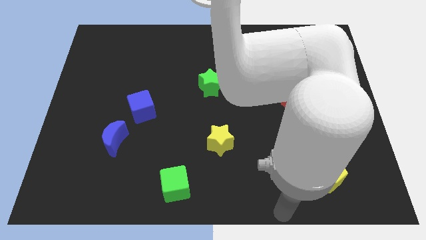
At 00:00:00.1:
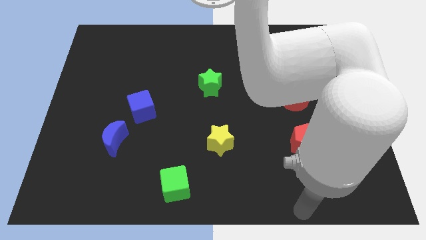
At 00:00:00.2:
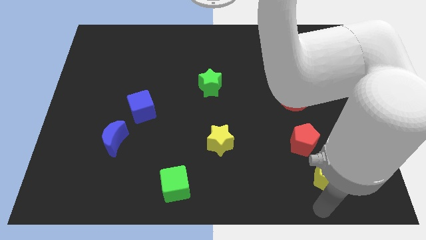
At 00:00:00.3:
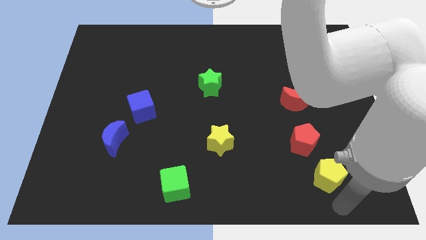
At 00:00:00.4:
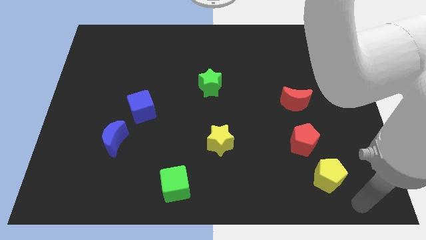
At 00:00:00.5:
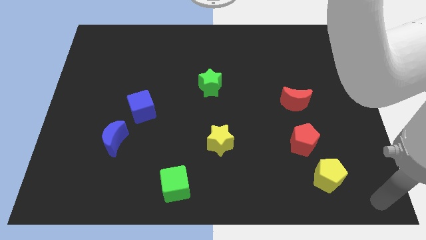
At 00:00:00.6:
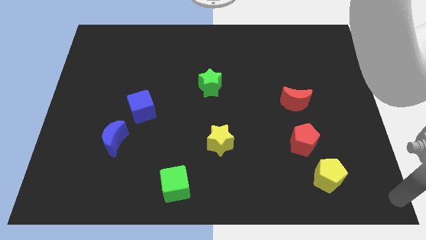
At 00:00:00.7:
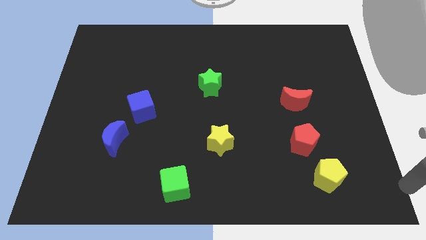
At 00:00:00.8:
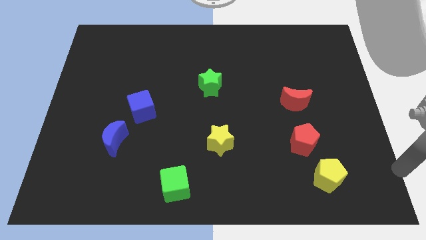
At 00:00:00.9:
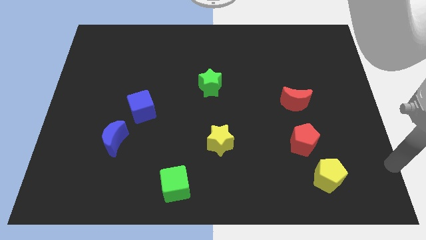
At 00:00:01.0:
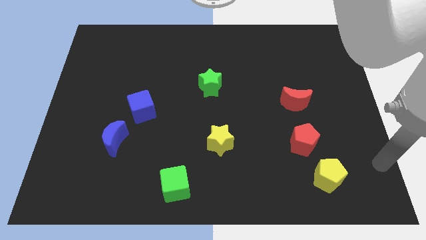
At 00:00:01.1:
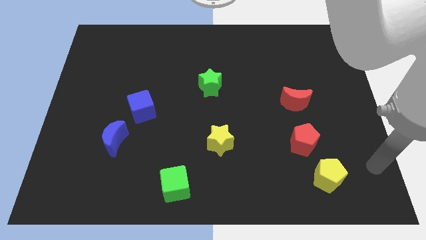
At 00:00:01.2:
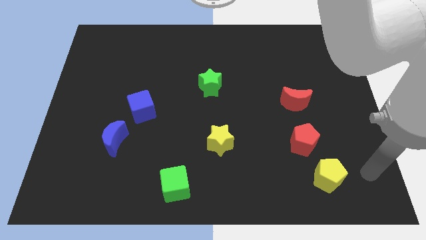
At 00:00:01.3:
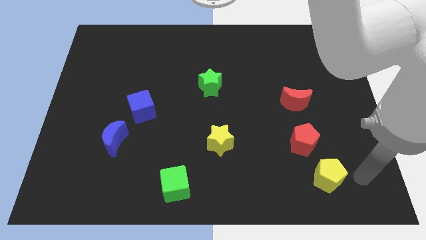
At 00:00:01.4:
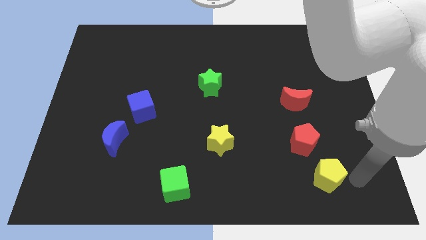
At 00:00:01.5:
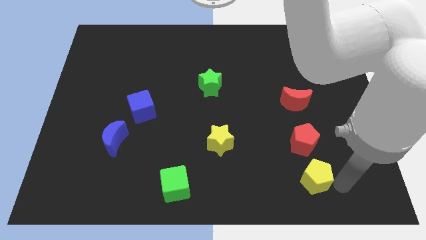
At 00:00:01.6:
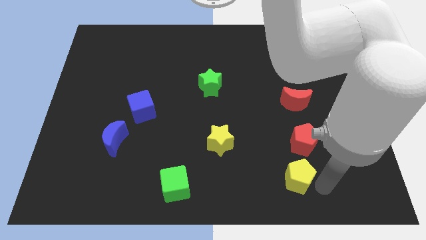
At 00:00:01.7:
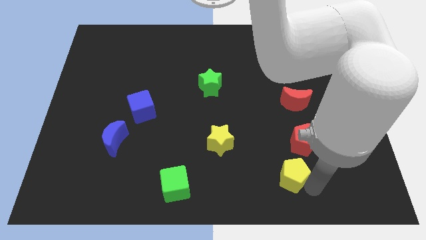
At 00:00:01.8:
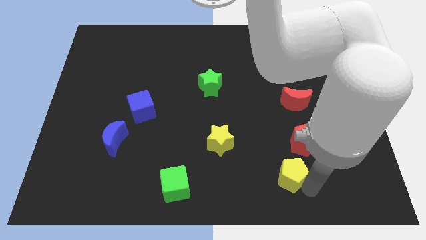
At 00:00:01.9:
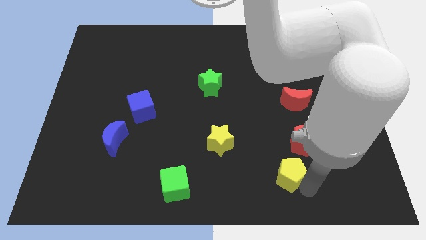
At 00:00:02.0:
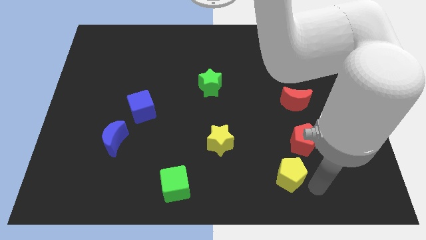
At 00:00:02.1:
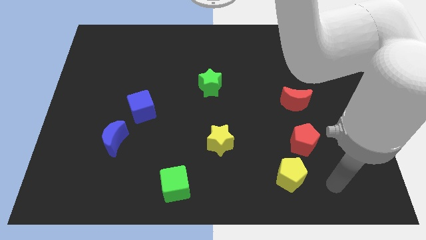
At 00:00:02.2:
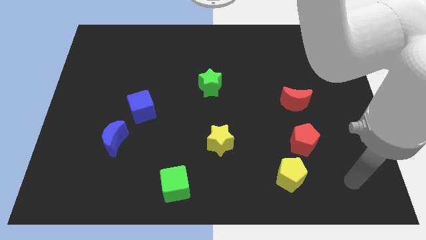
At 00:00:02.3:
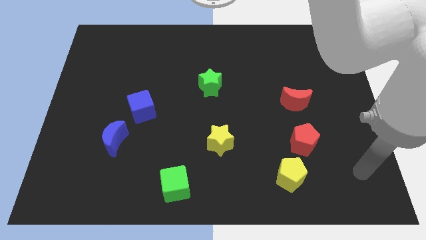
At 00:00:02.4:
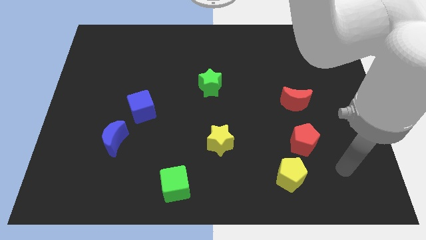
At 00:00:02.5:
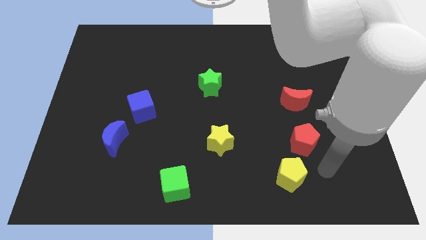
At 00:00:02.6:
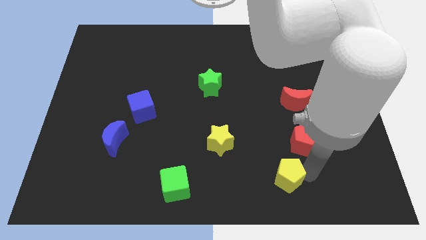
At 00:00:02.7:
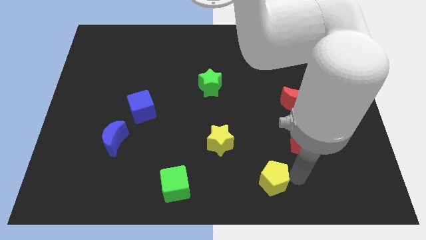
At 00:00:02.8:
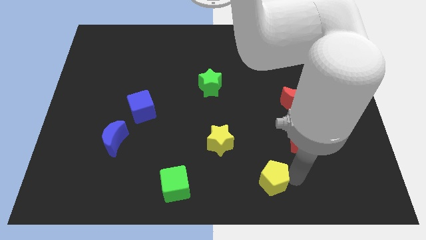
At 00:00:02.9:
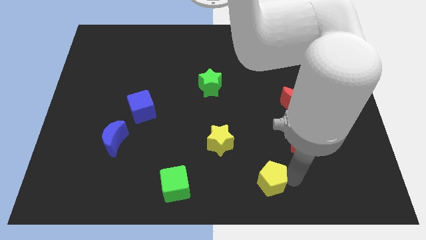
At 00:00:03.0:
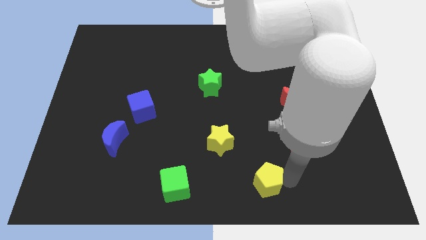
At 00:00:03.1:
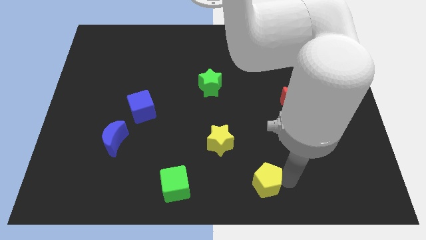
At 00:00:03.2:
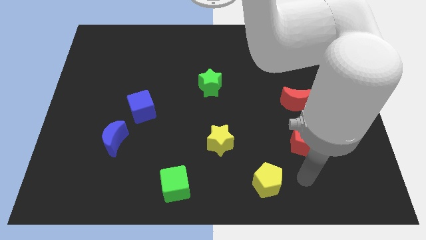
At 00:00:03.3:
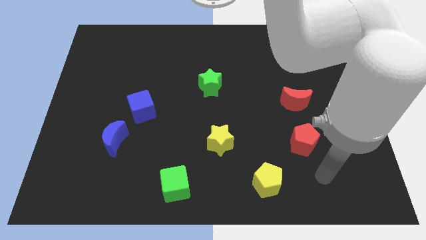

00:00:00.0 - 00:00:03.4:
move yellow pentagon towards green cube

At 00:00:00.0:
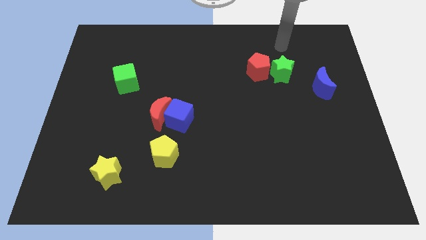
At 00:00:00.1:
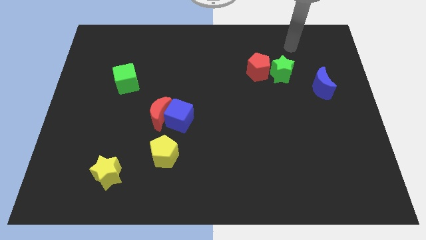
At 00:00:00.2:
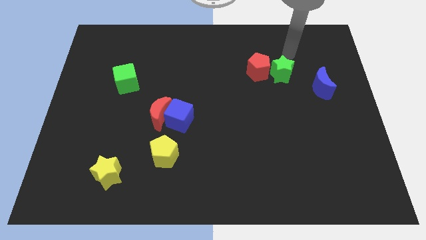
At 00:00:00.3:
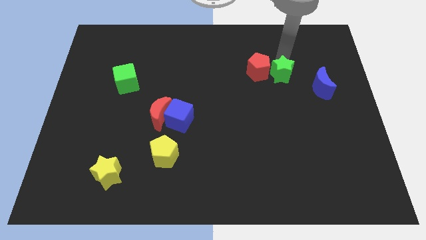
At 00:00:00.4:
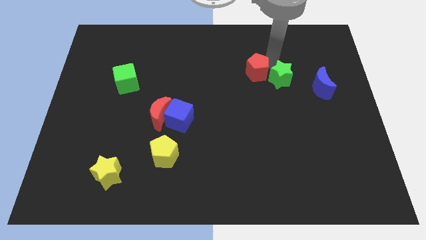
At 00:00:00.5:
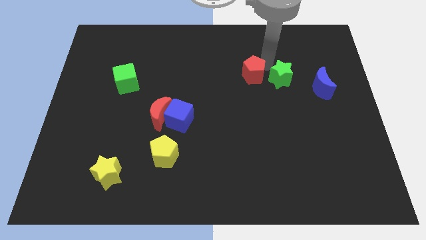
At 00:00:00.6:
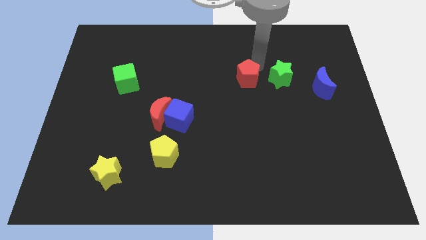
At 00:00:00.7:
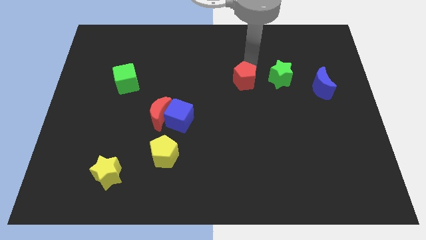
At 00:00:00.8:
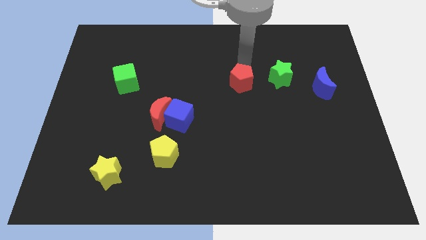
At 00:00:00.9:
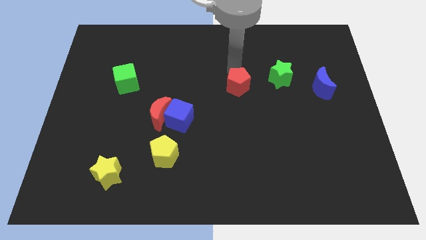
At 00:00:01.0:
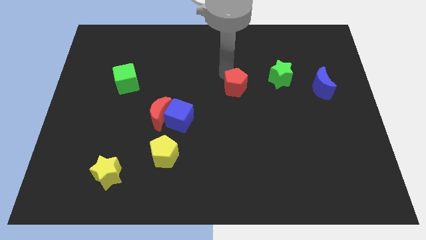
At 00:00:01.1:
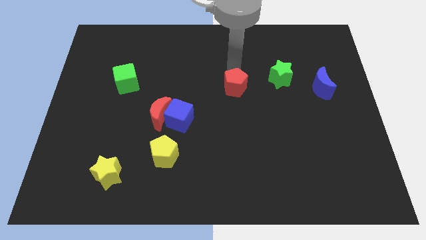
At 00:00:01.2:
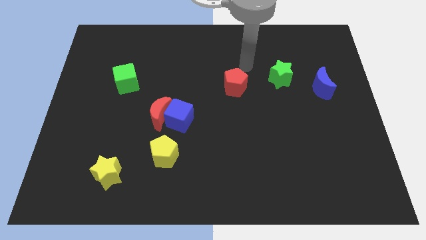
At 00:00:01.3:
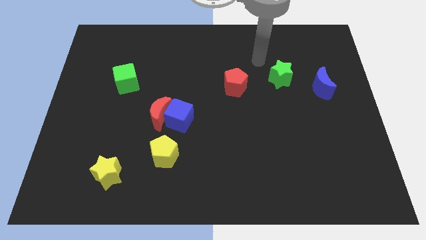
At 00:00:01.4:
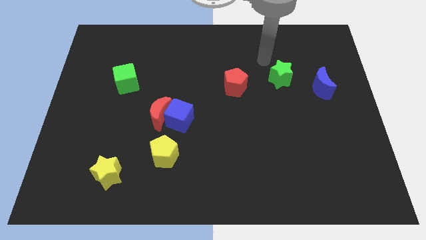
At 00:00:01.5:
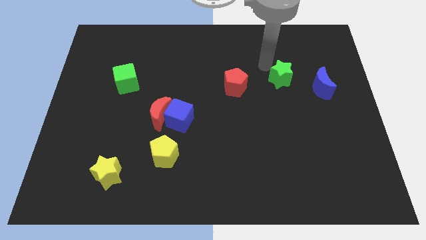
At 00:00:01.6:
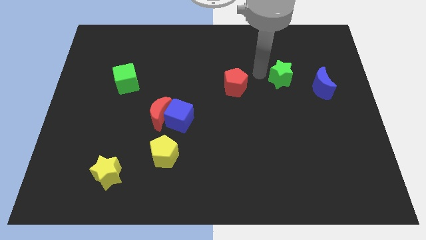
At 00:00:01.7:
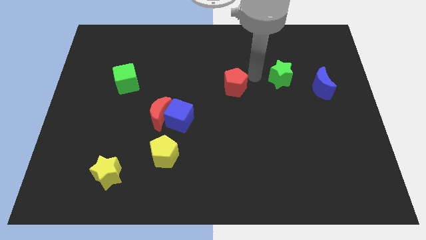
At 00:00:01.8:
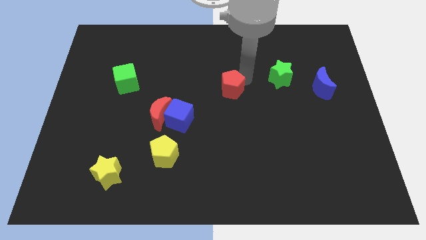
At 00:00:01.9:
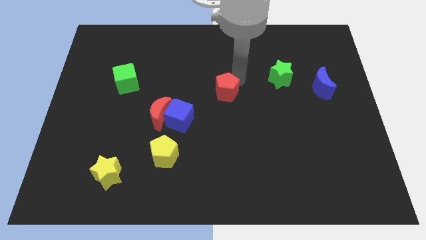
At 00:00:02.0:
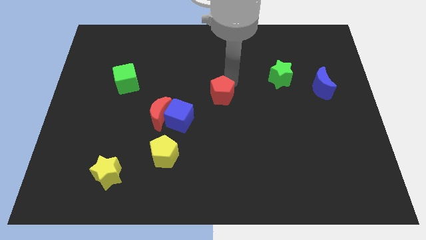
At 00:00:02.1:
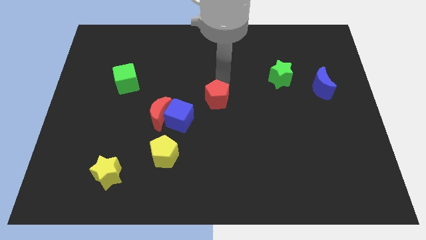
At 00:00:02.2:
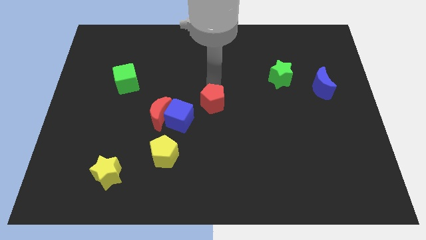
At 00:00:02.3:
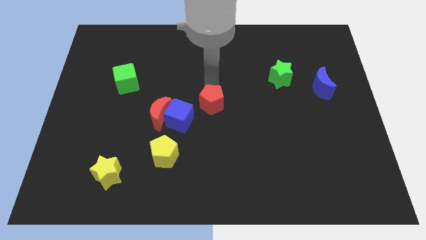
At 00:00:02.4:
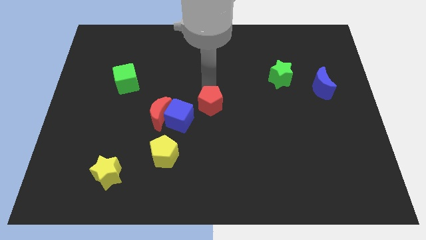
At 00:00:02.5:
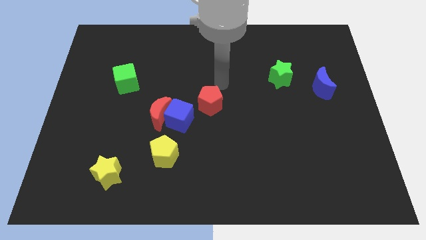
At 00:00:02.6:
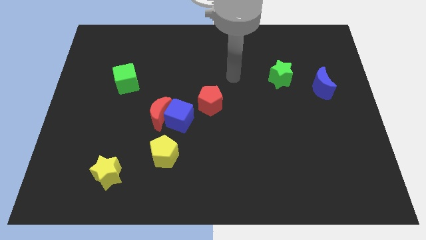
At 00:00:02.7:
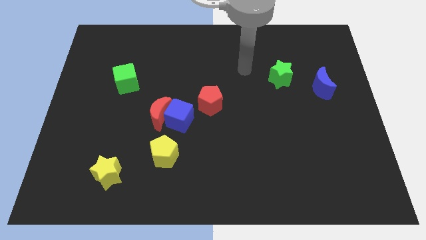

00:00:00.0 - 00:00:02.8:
push the red pentagon to the top right of the blue cube

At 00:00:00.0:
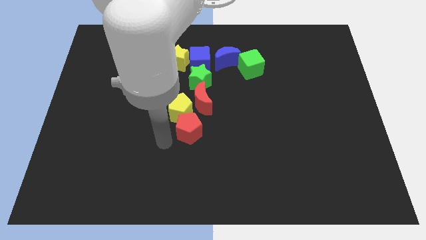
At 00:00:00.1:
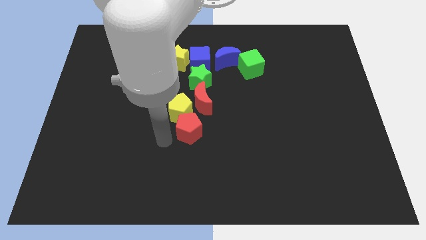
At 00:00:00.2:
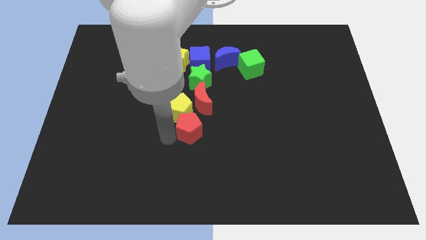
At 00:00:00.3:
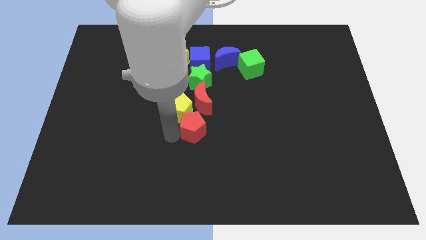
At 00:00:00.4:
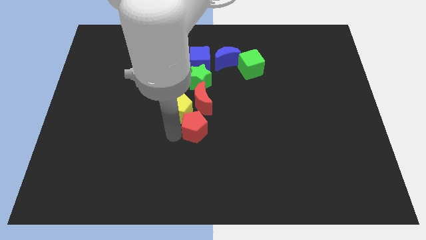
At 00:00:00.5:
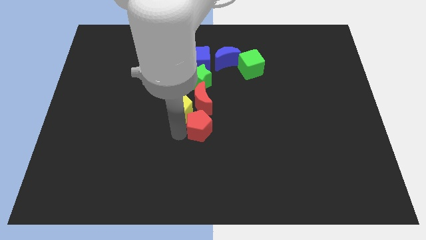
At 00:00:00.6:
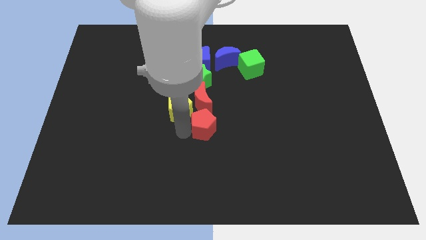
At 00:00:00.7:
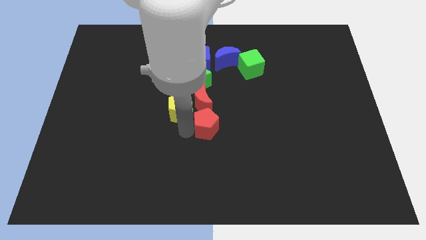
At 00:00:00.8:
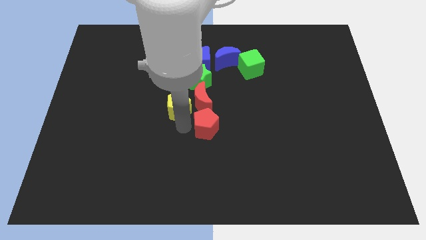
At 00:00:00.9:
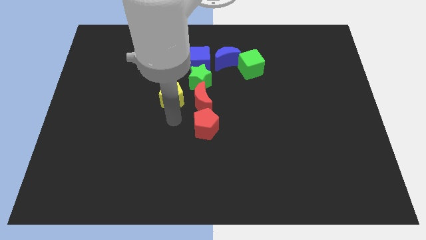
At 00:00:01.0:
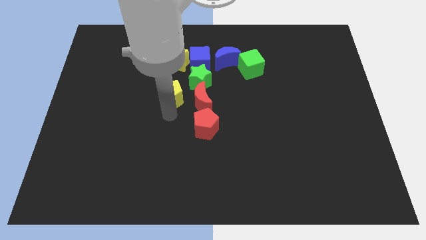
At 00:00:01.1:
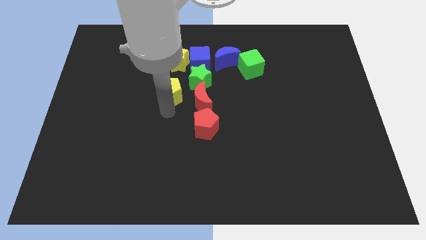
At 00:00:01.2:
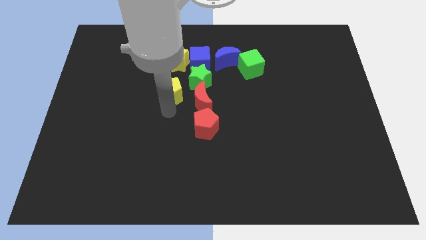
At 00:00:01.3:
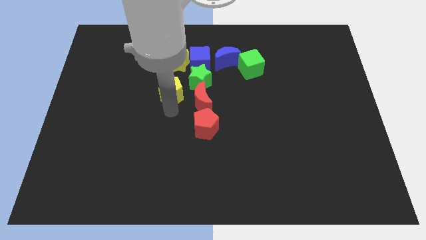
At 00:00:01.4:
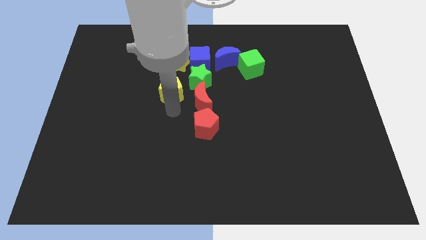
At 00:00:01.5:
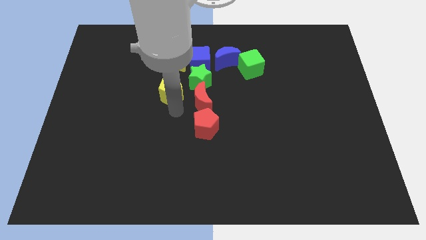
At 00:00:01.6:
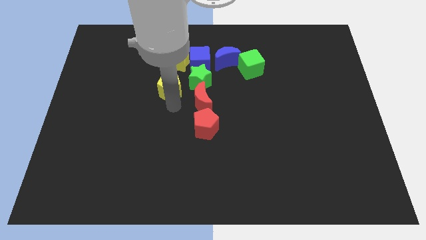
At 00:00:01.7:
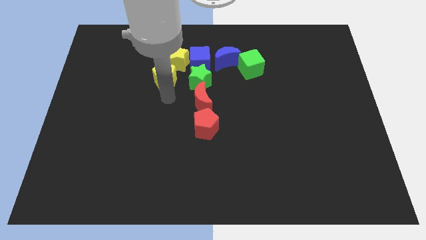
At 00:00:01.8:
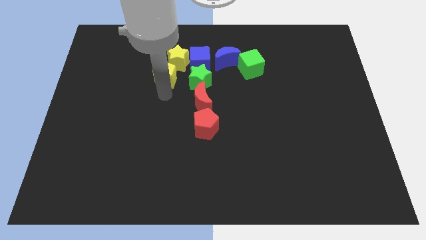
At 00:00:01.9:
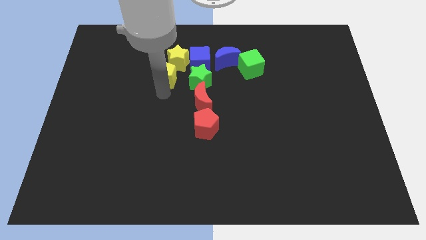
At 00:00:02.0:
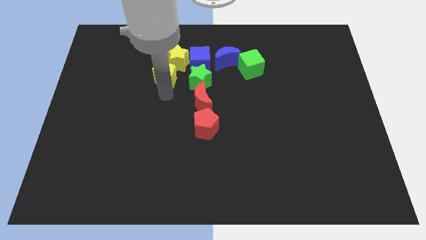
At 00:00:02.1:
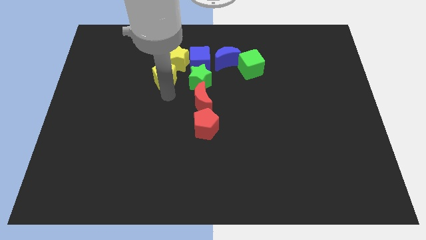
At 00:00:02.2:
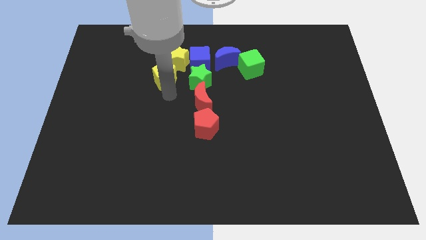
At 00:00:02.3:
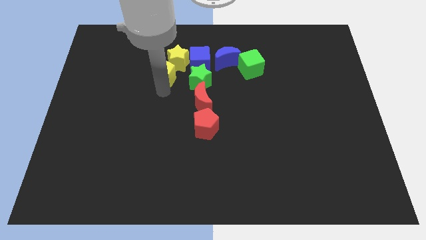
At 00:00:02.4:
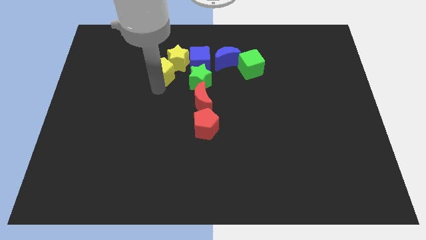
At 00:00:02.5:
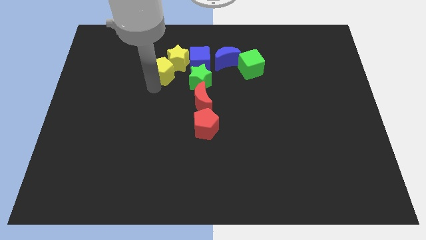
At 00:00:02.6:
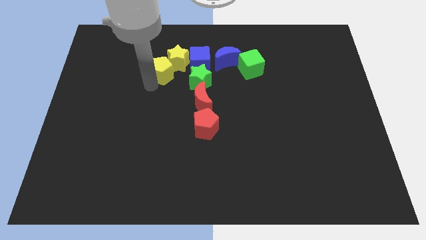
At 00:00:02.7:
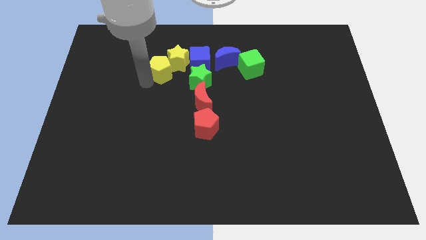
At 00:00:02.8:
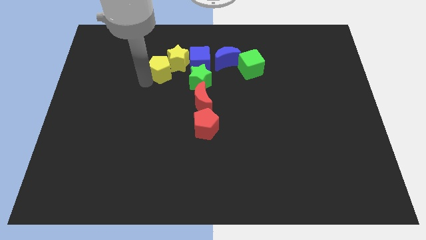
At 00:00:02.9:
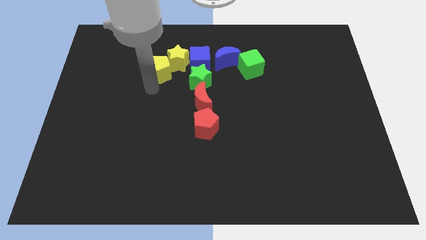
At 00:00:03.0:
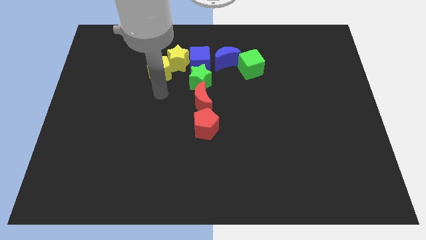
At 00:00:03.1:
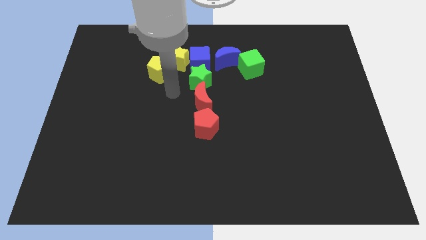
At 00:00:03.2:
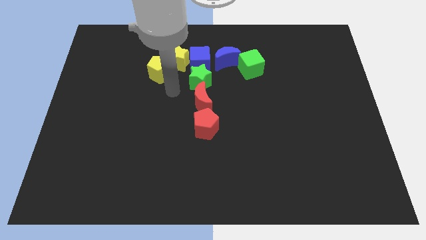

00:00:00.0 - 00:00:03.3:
move the yellow pentagon to the bottom left of the yellow star
